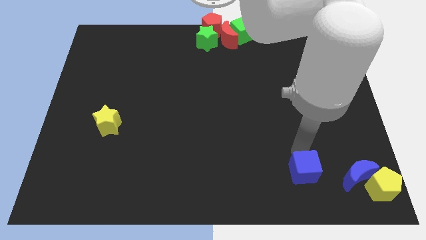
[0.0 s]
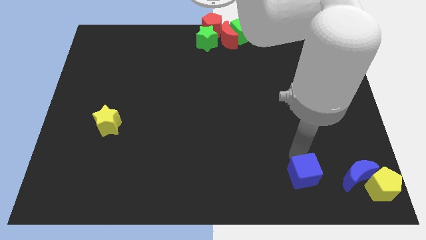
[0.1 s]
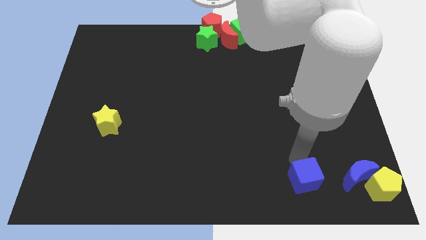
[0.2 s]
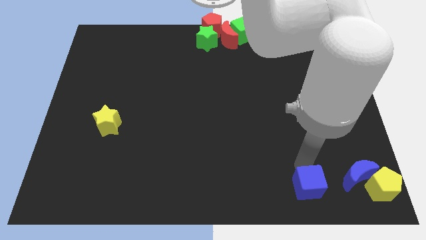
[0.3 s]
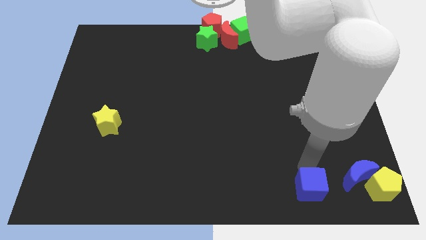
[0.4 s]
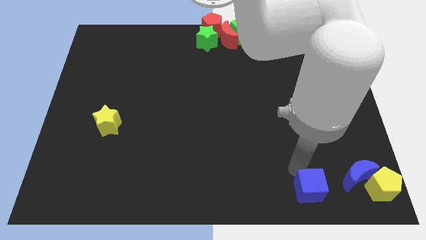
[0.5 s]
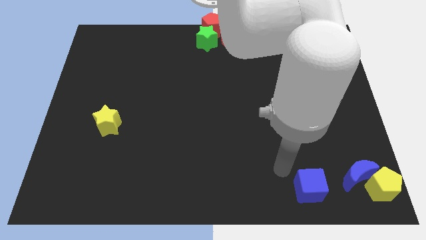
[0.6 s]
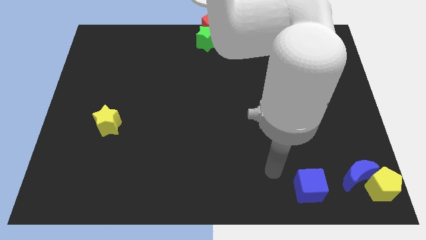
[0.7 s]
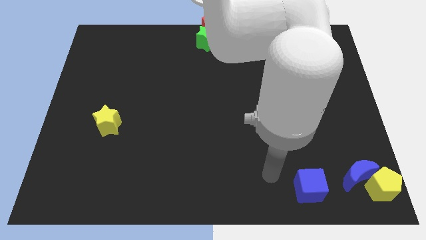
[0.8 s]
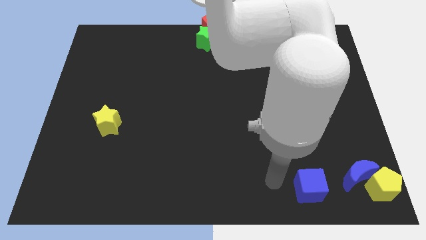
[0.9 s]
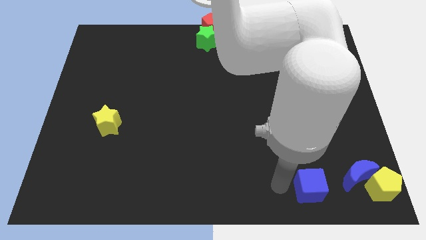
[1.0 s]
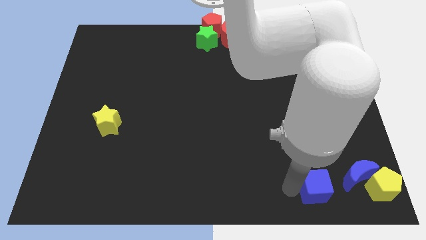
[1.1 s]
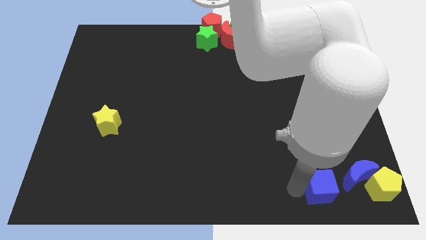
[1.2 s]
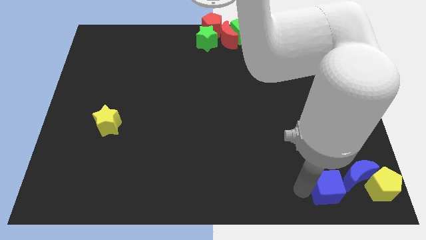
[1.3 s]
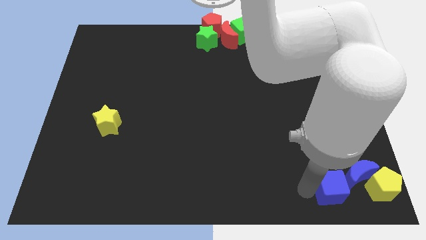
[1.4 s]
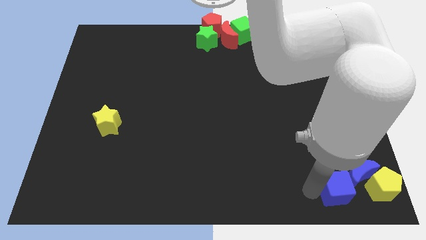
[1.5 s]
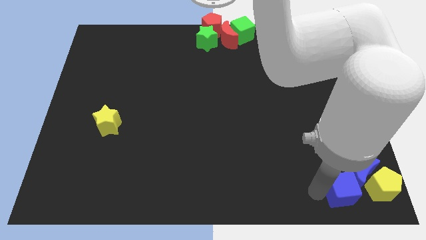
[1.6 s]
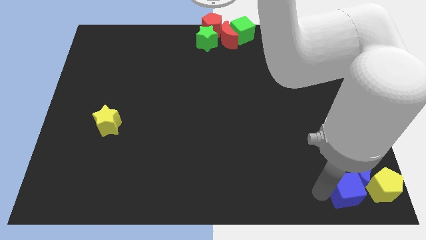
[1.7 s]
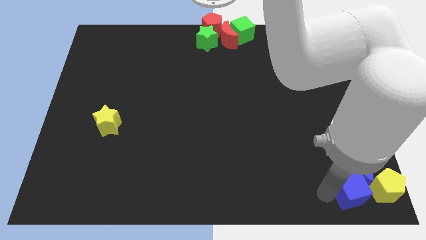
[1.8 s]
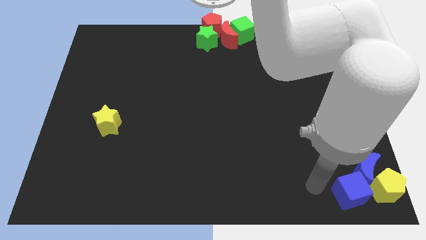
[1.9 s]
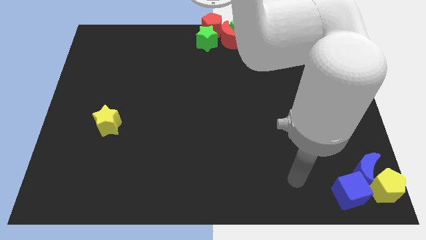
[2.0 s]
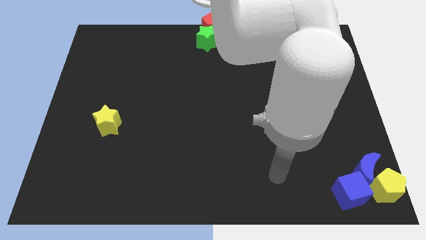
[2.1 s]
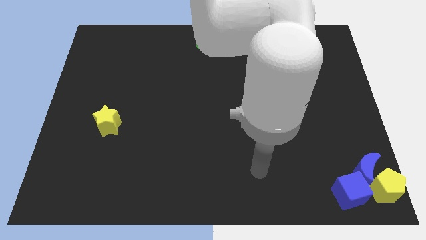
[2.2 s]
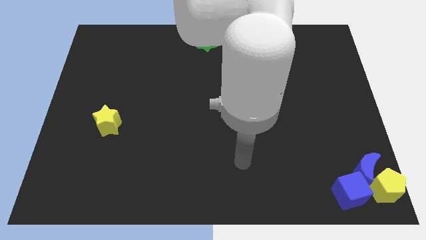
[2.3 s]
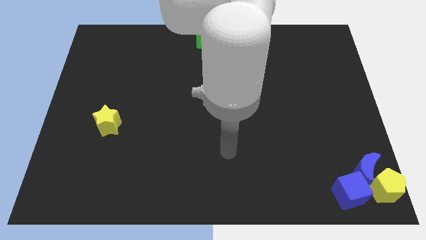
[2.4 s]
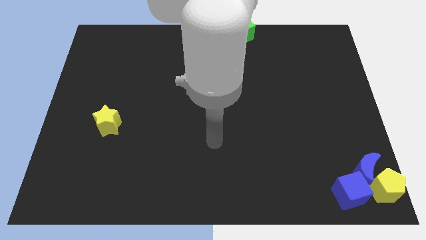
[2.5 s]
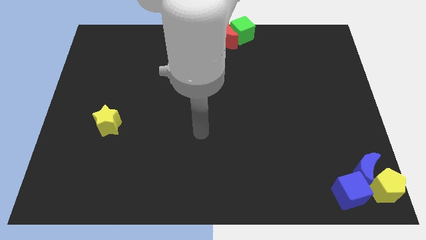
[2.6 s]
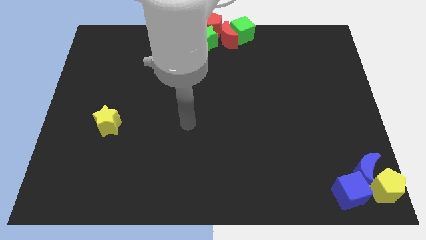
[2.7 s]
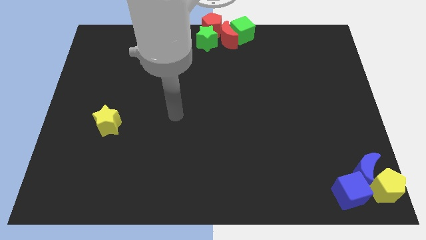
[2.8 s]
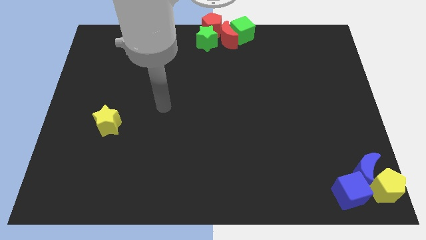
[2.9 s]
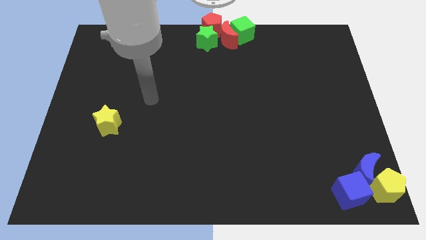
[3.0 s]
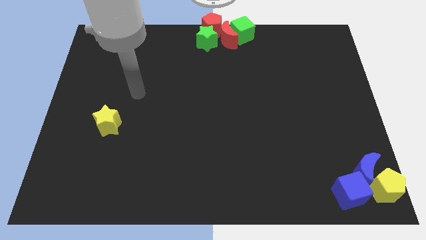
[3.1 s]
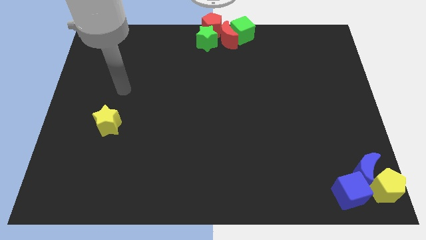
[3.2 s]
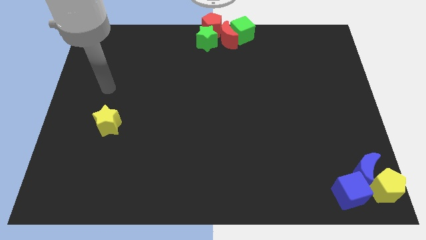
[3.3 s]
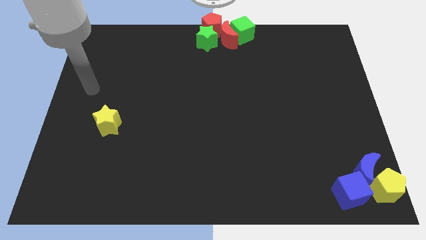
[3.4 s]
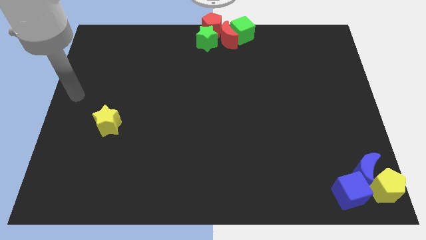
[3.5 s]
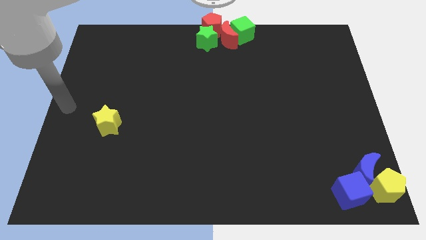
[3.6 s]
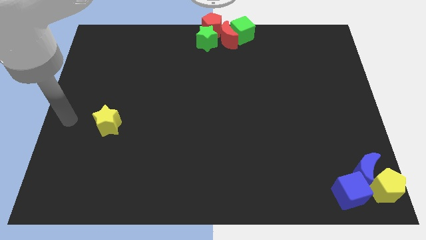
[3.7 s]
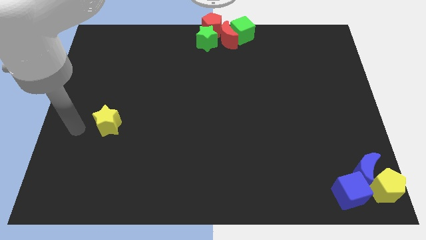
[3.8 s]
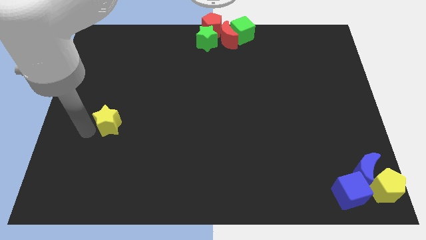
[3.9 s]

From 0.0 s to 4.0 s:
push the blue cube into the yellow pentagon

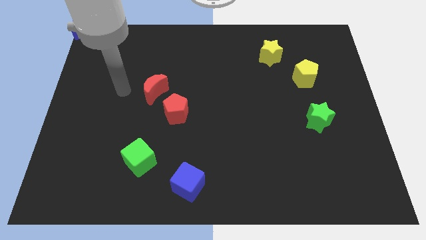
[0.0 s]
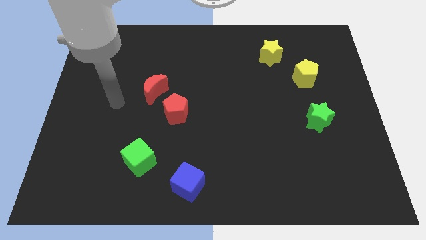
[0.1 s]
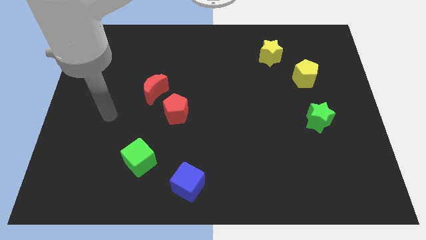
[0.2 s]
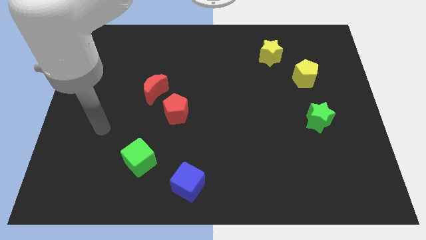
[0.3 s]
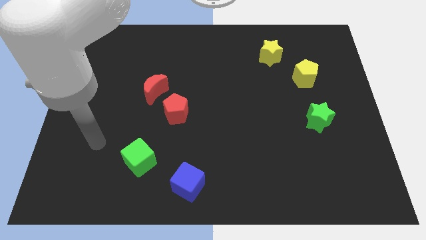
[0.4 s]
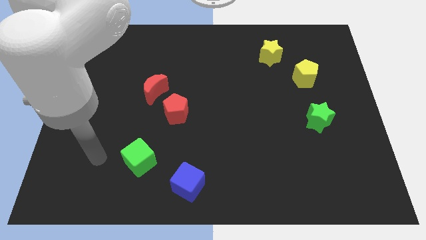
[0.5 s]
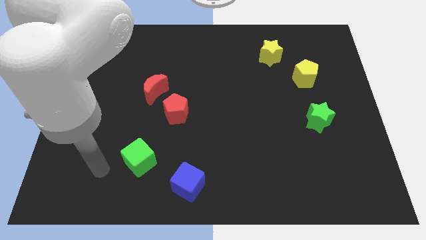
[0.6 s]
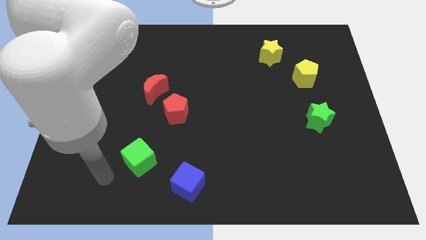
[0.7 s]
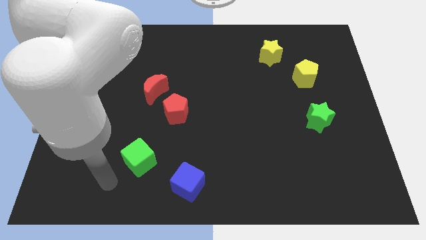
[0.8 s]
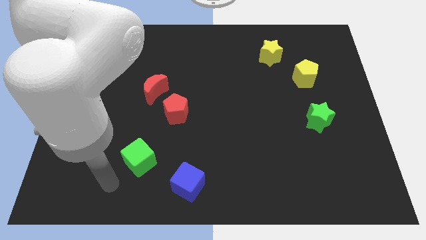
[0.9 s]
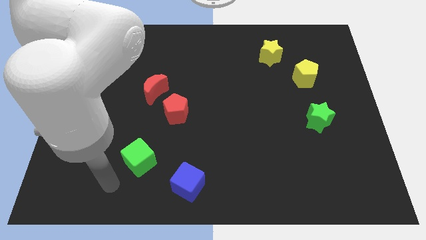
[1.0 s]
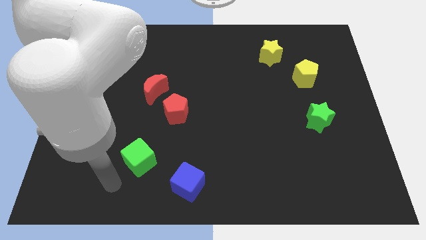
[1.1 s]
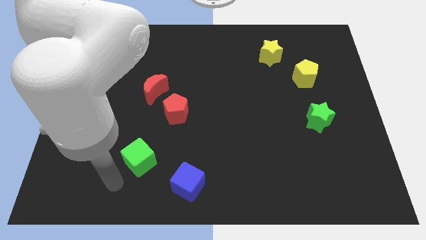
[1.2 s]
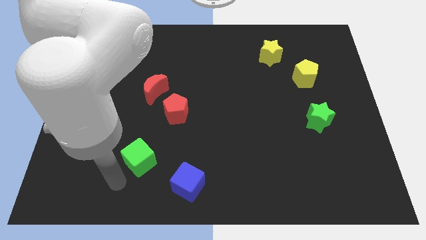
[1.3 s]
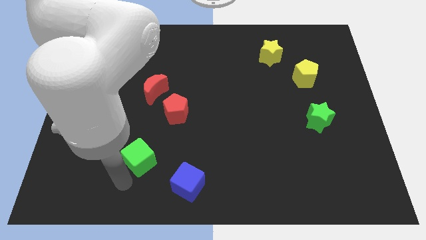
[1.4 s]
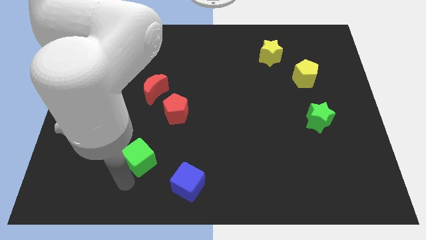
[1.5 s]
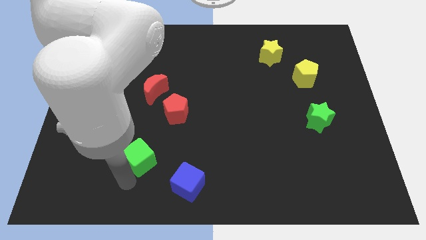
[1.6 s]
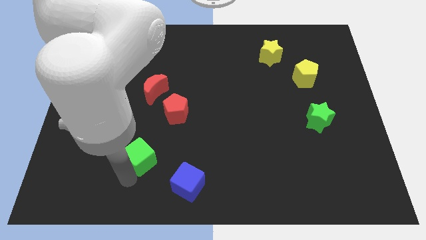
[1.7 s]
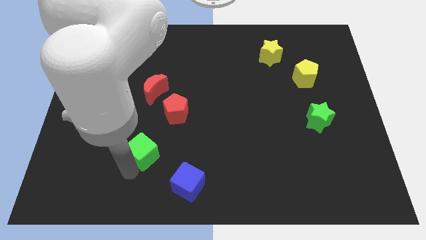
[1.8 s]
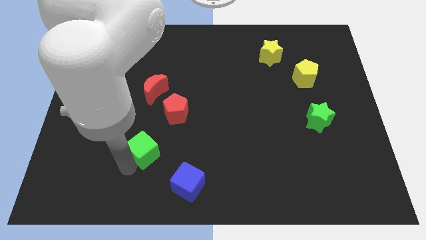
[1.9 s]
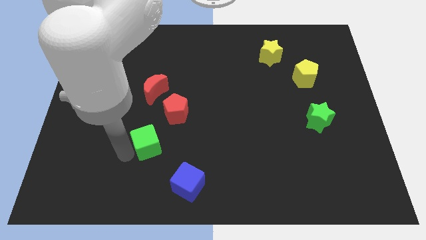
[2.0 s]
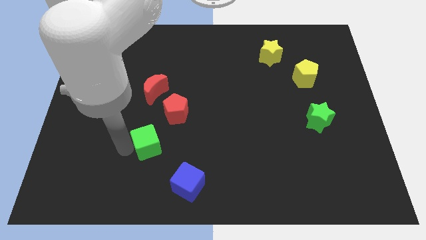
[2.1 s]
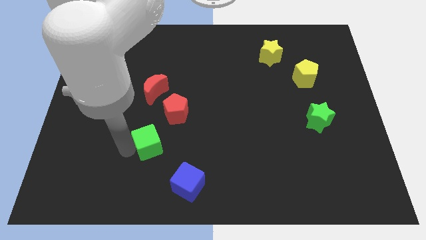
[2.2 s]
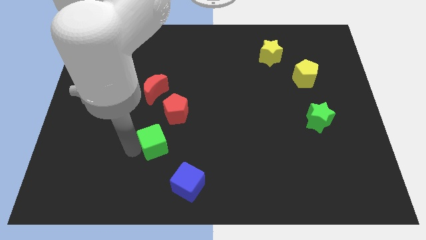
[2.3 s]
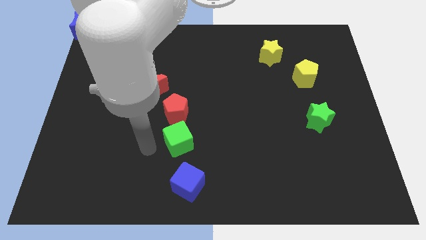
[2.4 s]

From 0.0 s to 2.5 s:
place green cube below red pentagon

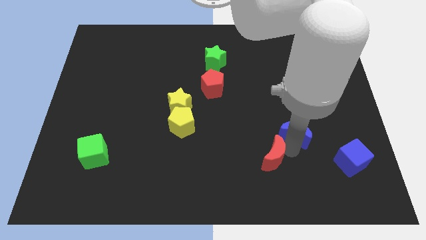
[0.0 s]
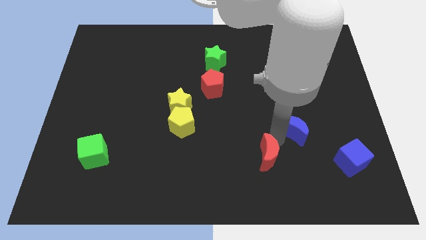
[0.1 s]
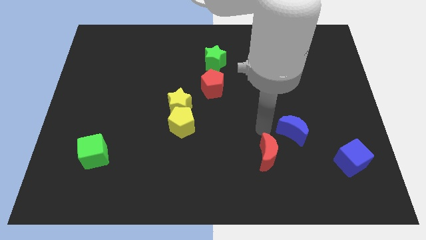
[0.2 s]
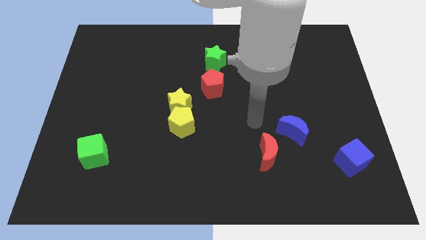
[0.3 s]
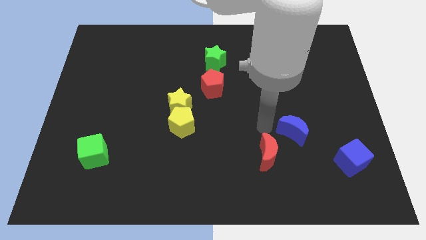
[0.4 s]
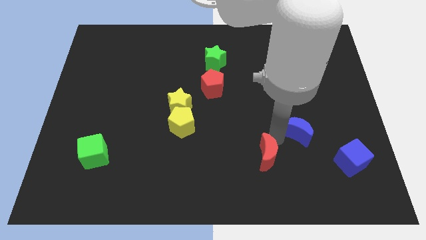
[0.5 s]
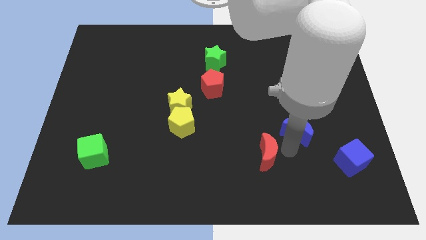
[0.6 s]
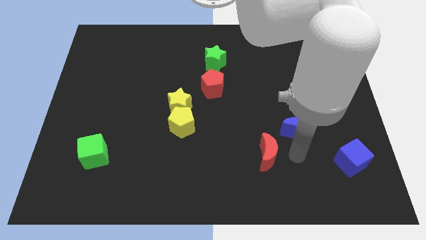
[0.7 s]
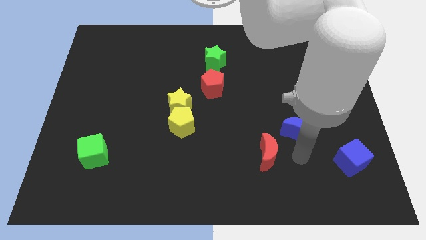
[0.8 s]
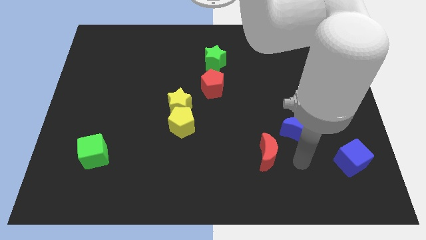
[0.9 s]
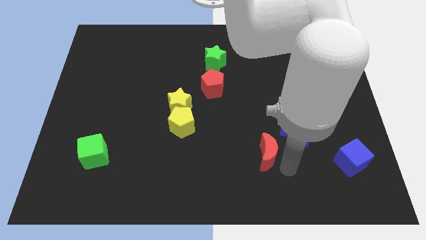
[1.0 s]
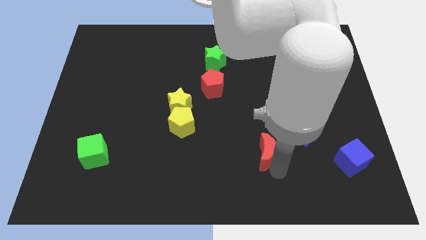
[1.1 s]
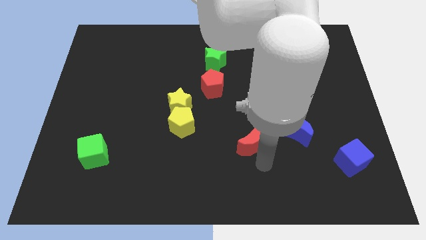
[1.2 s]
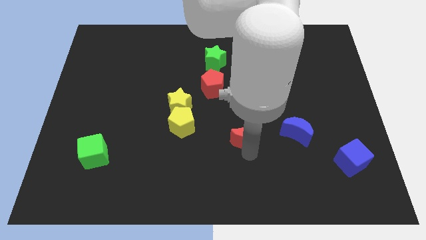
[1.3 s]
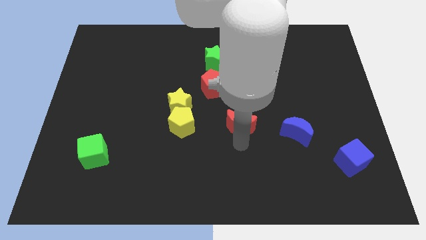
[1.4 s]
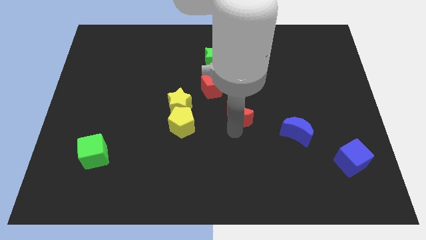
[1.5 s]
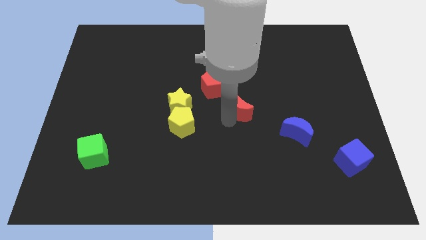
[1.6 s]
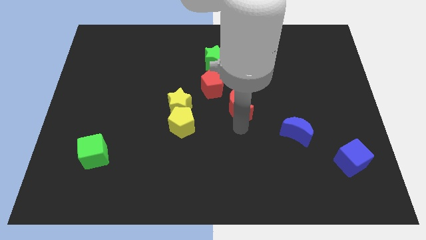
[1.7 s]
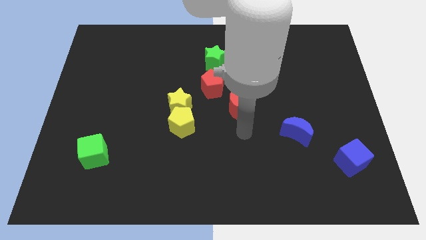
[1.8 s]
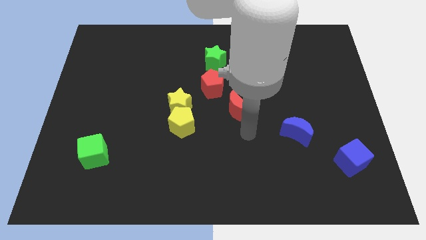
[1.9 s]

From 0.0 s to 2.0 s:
place the red moon diagonally top left to the blue moon

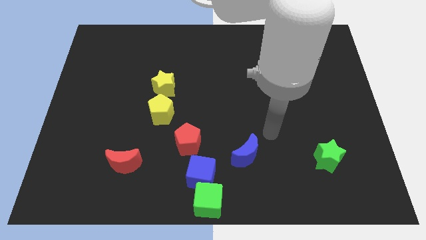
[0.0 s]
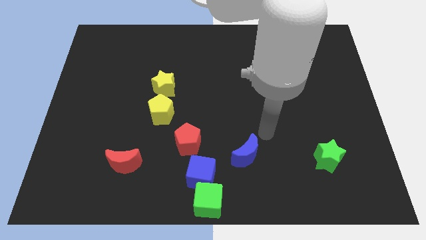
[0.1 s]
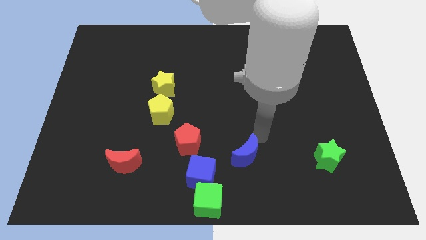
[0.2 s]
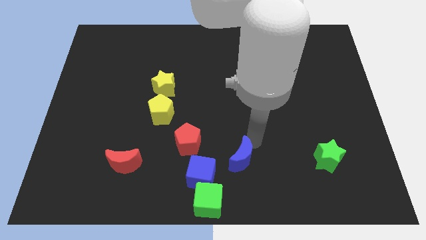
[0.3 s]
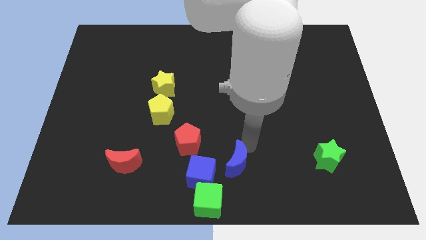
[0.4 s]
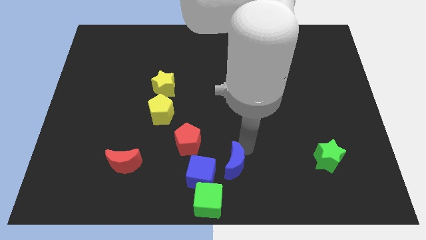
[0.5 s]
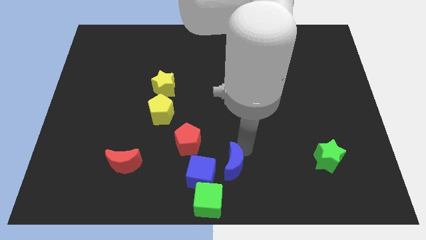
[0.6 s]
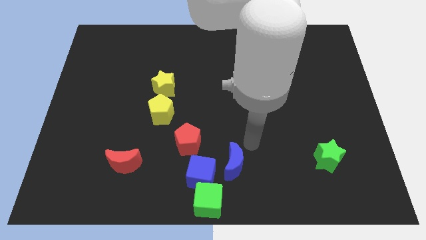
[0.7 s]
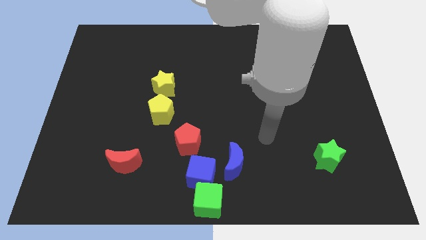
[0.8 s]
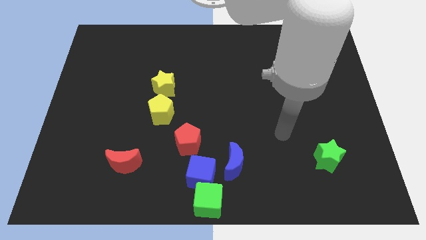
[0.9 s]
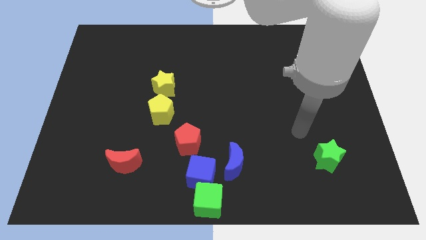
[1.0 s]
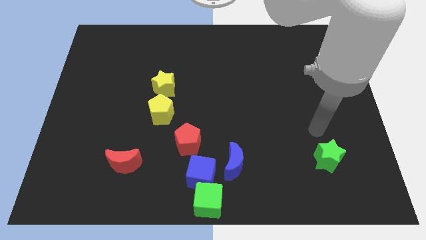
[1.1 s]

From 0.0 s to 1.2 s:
move the blue crescent to the right of the blue cube
